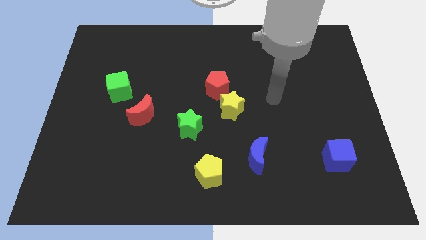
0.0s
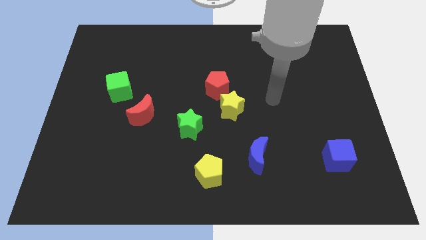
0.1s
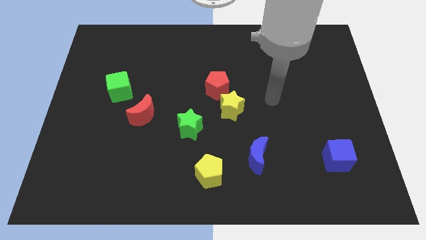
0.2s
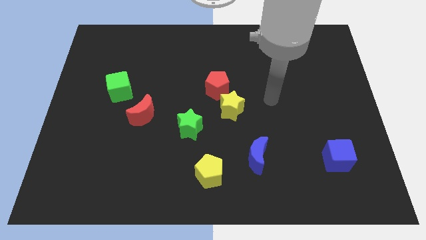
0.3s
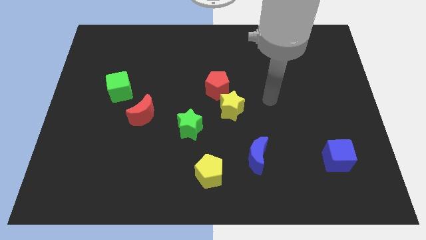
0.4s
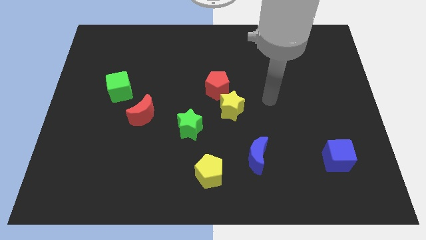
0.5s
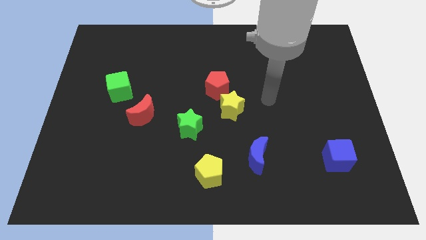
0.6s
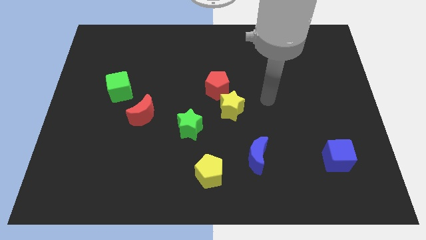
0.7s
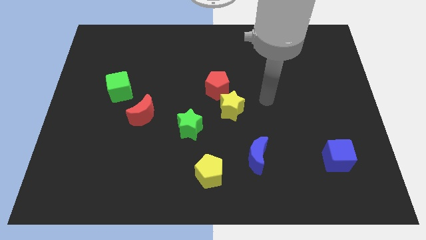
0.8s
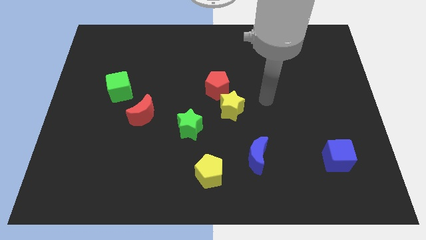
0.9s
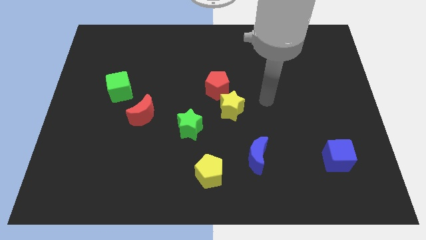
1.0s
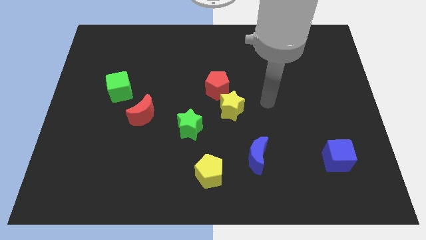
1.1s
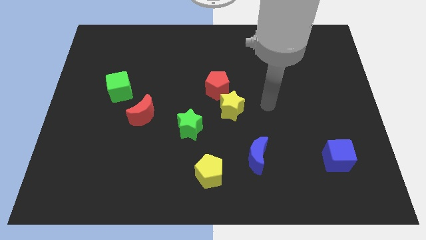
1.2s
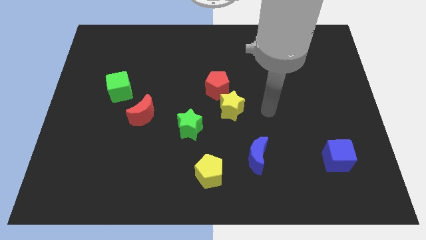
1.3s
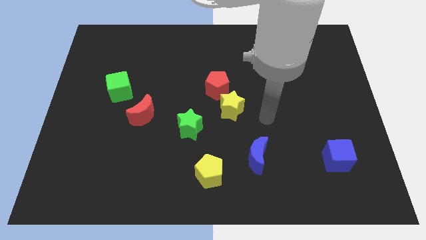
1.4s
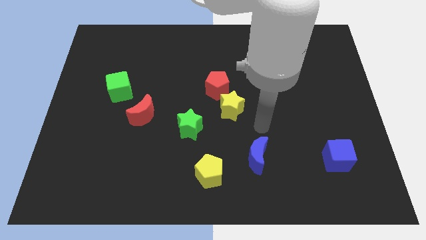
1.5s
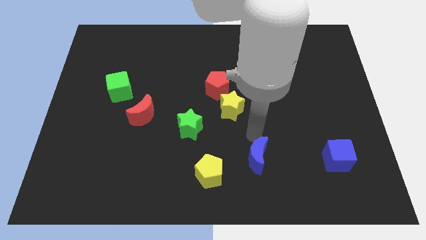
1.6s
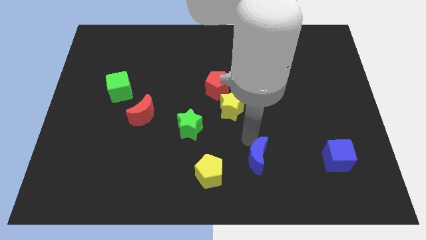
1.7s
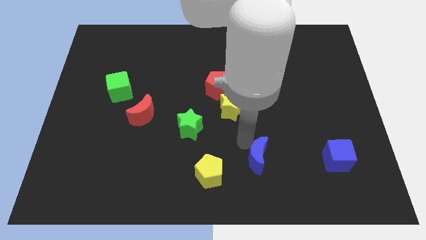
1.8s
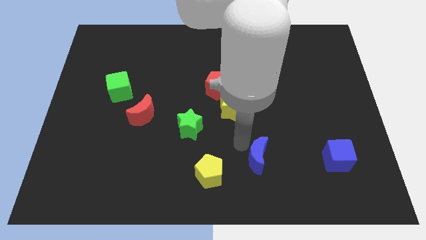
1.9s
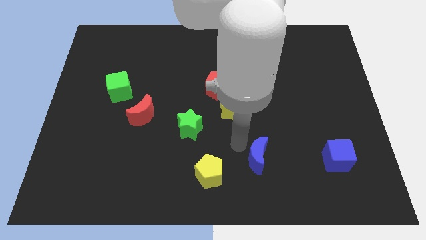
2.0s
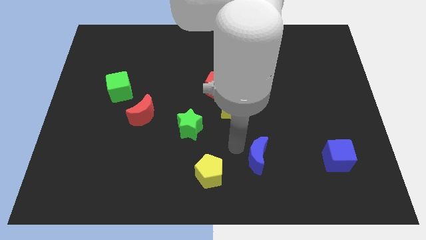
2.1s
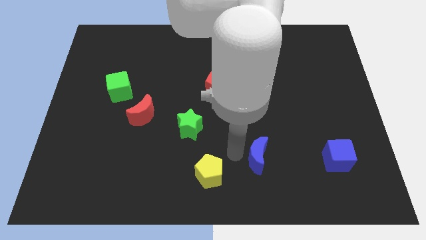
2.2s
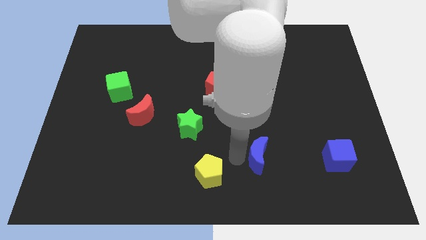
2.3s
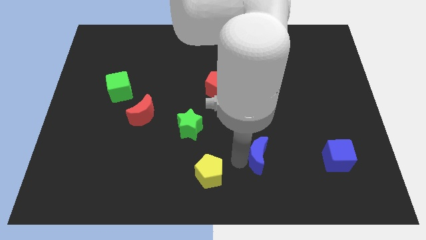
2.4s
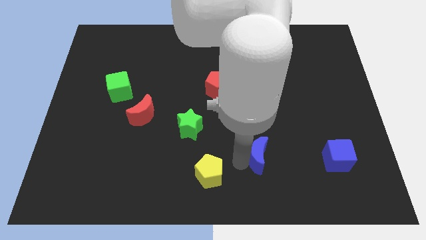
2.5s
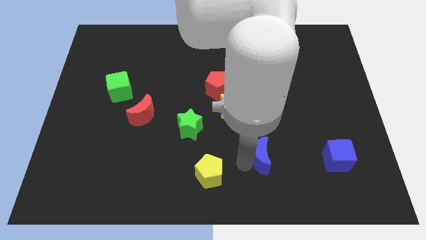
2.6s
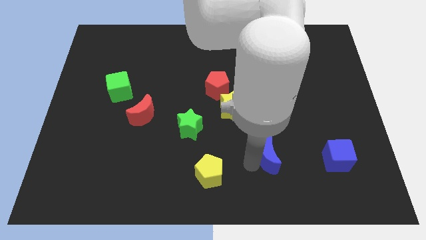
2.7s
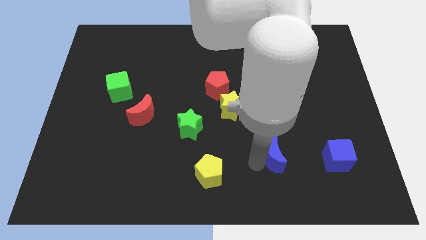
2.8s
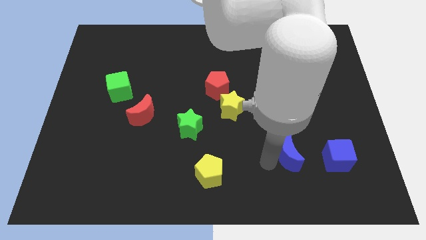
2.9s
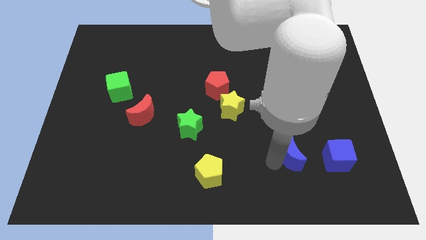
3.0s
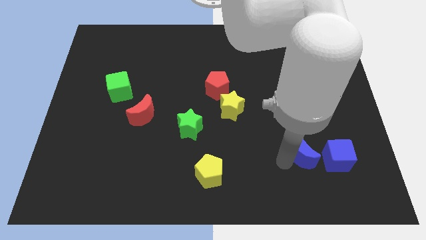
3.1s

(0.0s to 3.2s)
move the blue moon closer to the blue cube

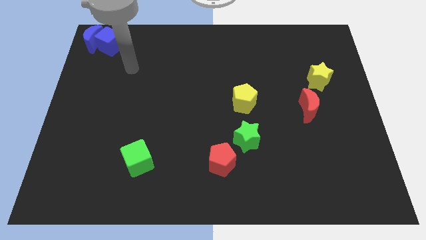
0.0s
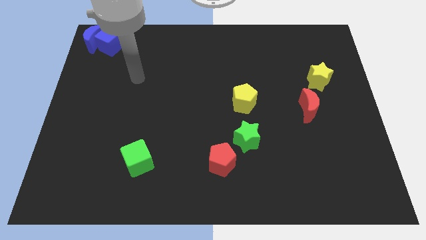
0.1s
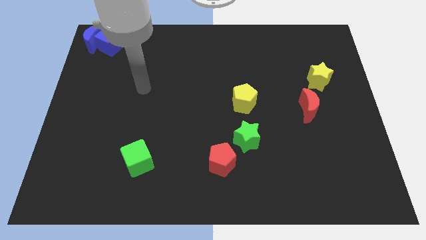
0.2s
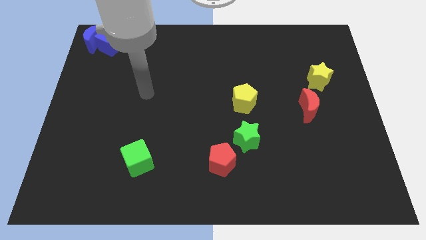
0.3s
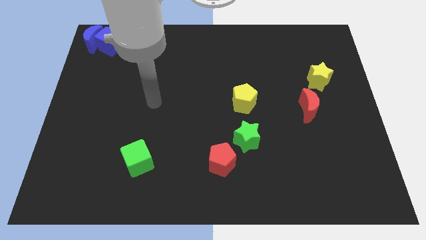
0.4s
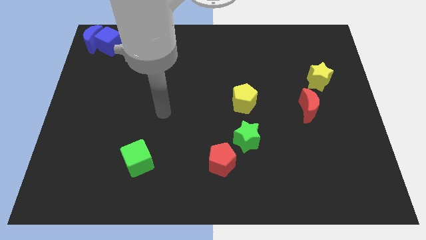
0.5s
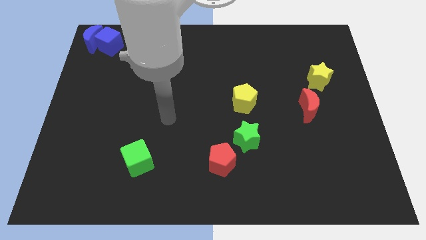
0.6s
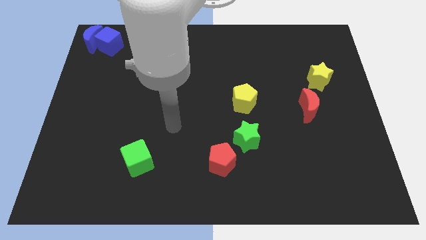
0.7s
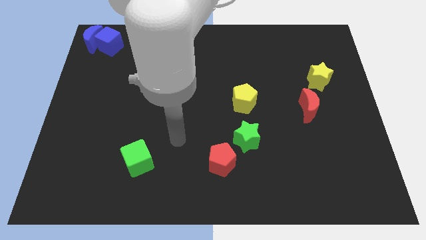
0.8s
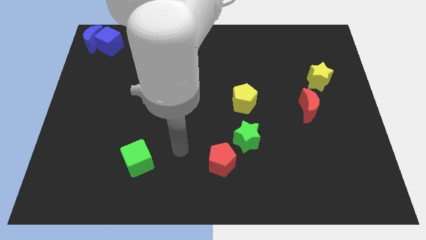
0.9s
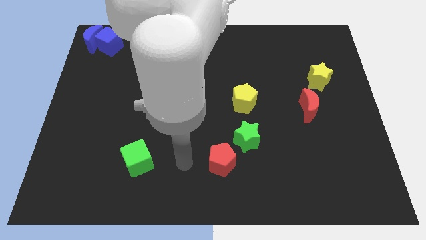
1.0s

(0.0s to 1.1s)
point your arm at the left of the red pentagon

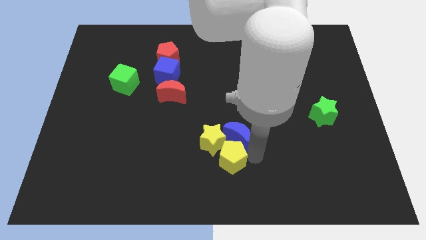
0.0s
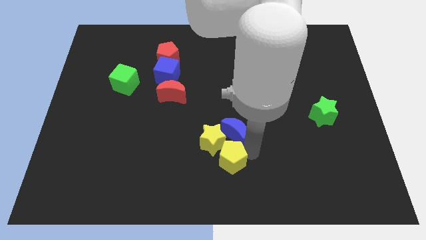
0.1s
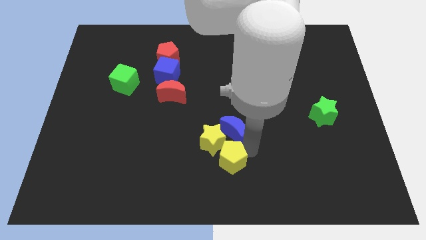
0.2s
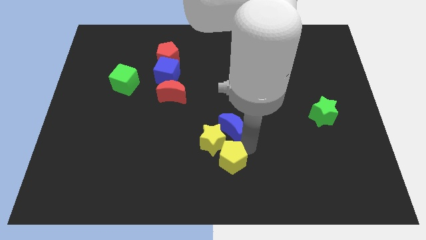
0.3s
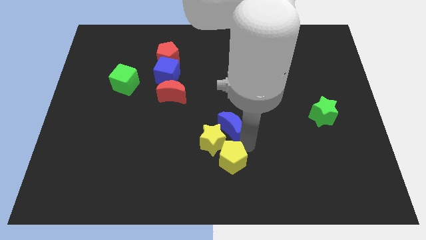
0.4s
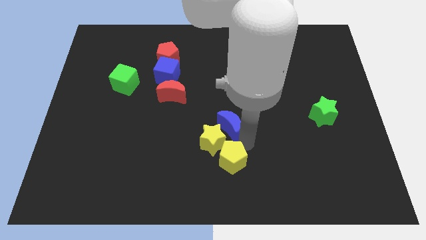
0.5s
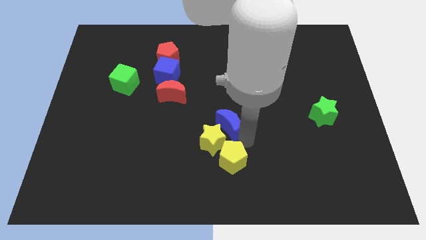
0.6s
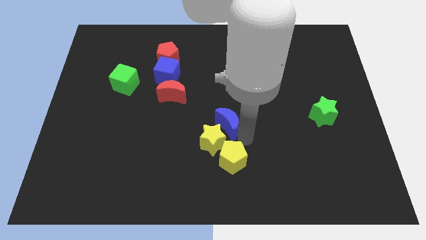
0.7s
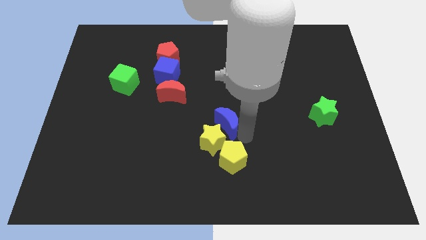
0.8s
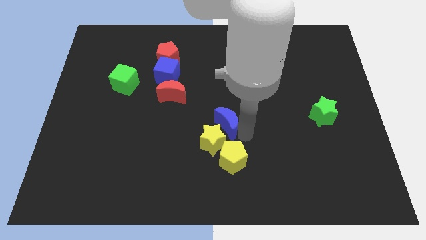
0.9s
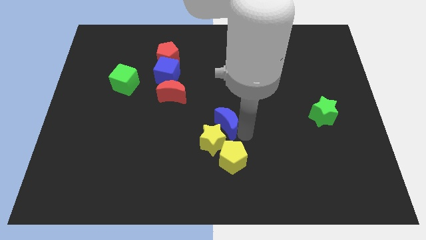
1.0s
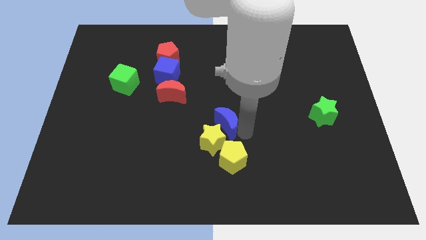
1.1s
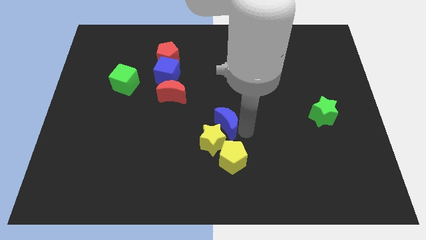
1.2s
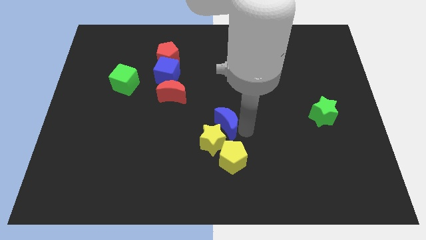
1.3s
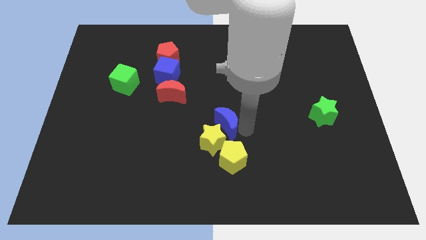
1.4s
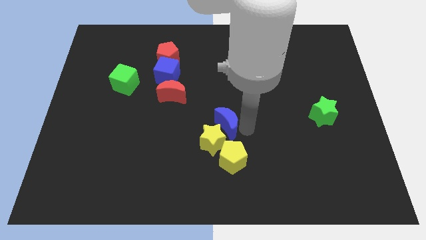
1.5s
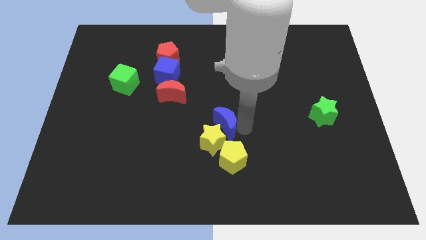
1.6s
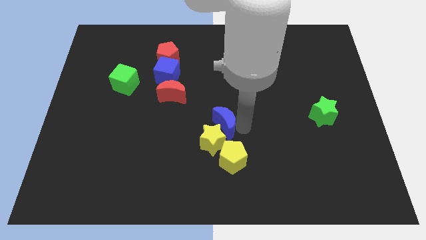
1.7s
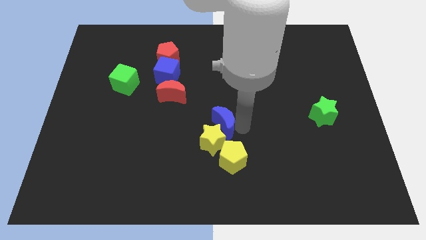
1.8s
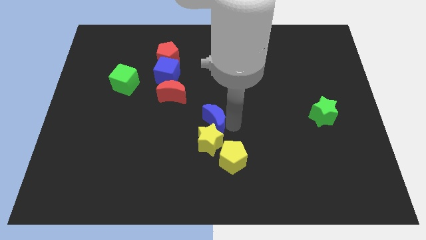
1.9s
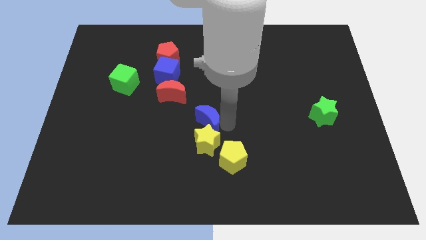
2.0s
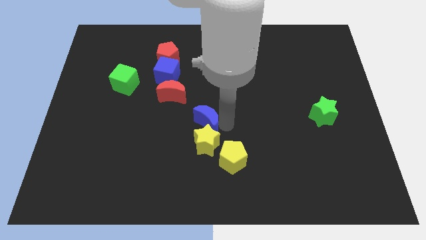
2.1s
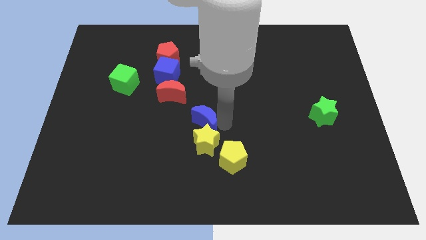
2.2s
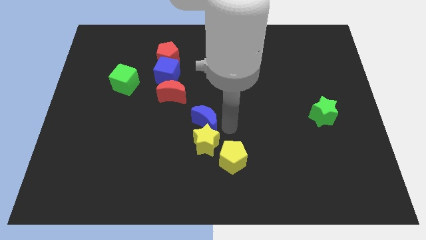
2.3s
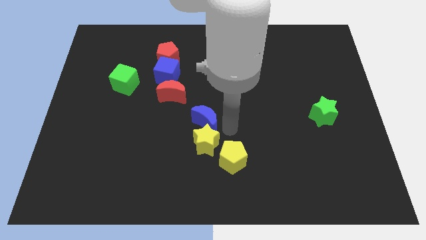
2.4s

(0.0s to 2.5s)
place the blue moon above the yellow star

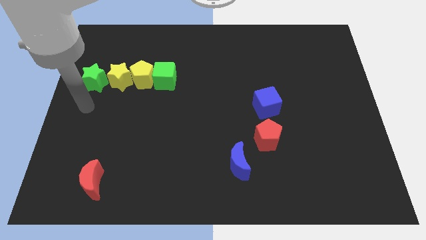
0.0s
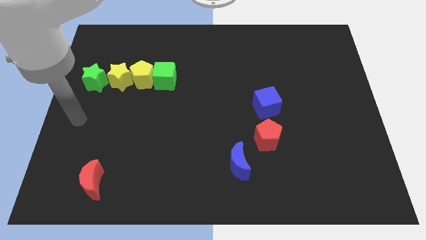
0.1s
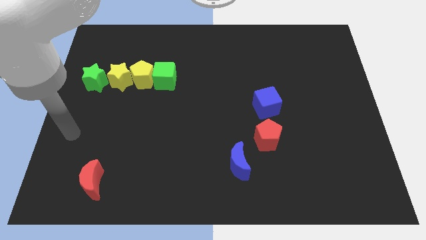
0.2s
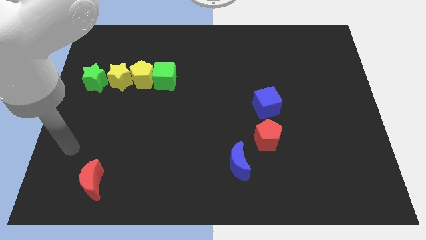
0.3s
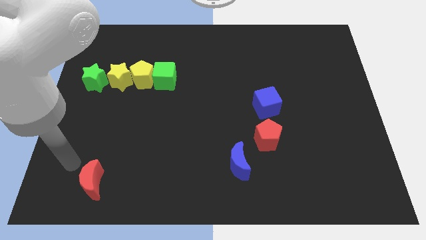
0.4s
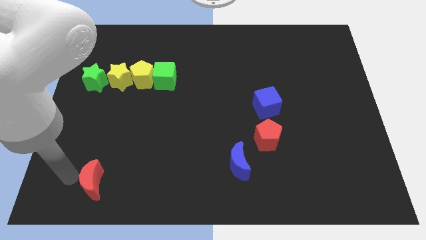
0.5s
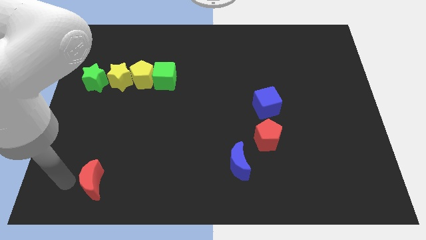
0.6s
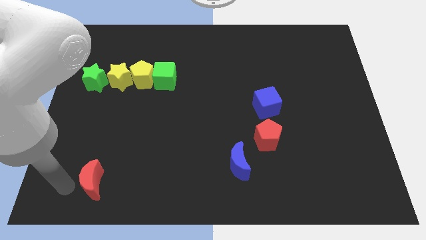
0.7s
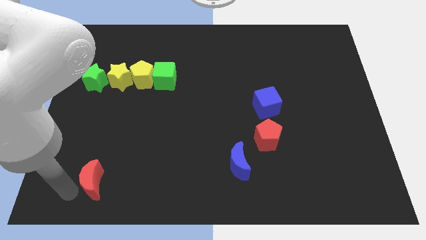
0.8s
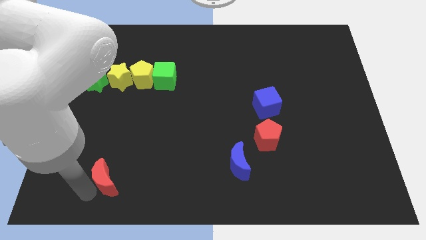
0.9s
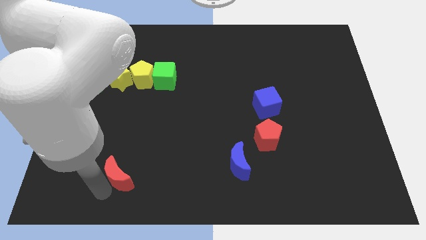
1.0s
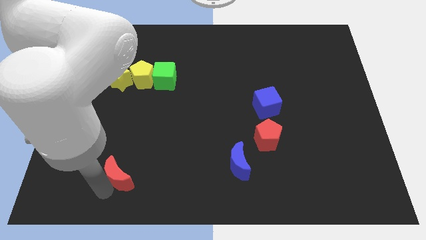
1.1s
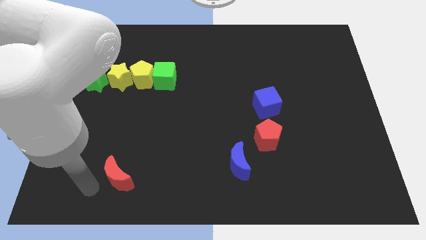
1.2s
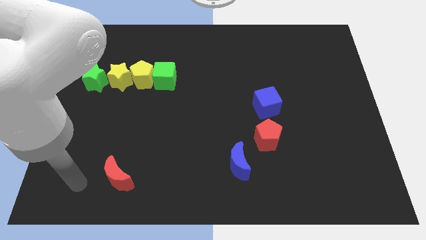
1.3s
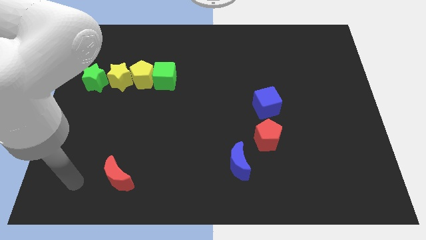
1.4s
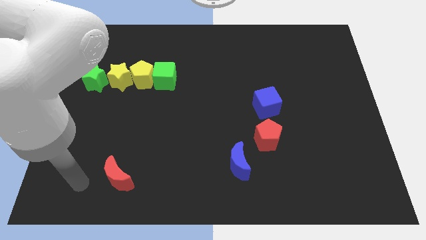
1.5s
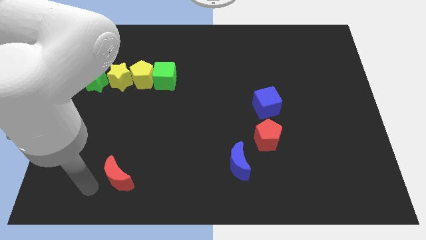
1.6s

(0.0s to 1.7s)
slightly move the red moon to the bottom center

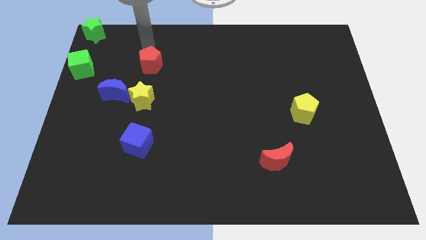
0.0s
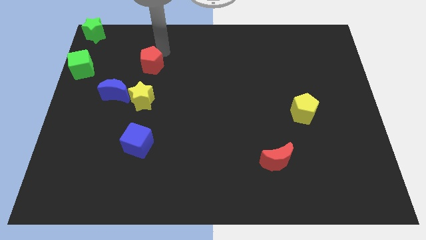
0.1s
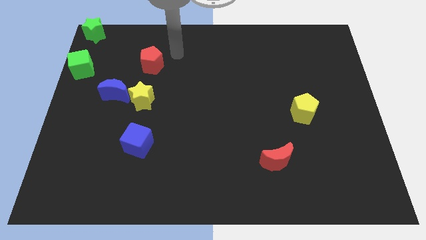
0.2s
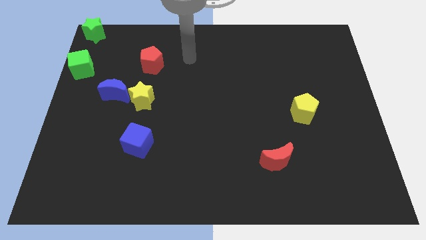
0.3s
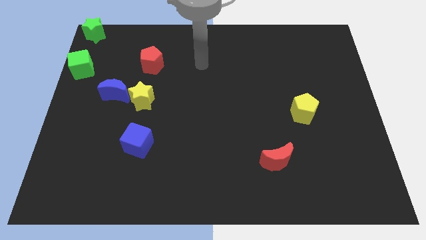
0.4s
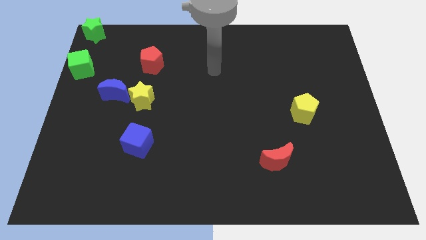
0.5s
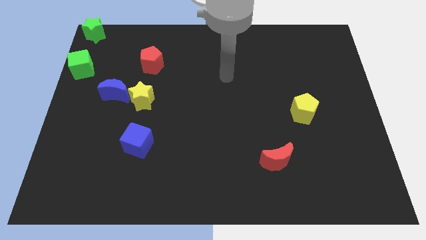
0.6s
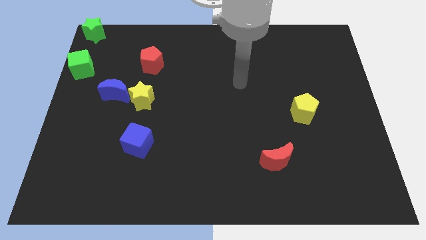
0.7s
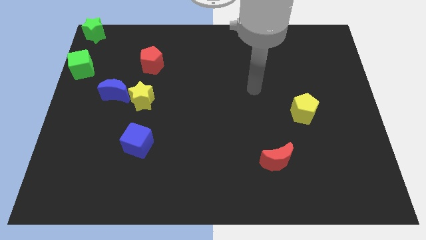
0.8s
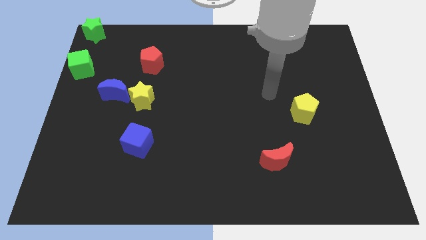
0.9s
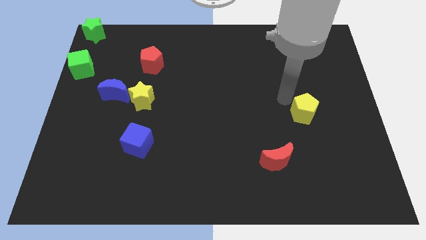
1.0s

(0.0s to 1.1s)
move your hand away from the red pentagon
